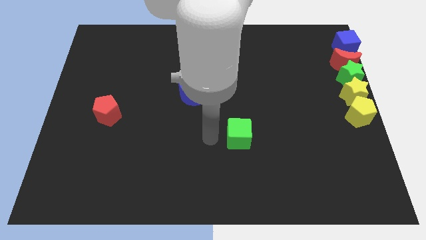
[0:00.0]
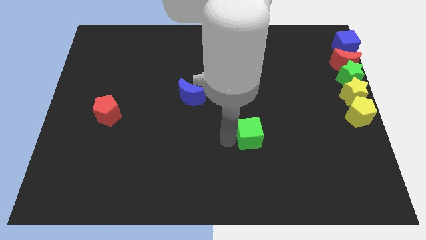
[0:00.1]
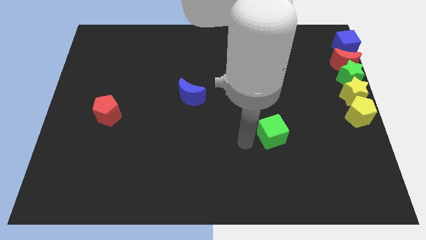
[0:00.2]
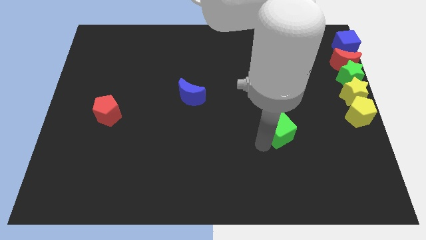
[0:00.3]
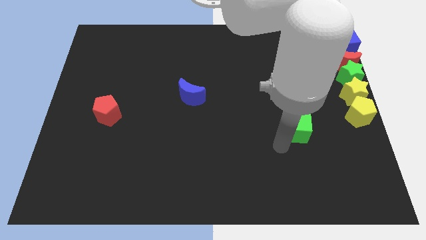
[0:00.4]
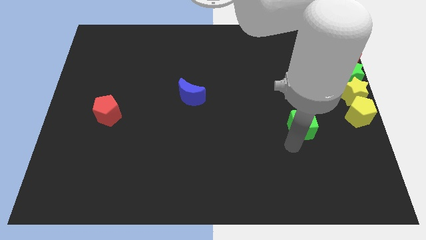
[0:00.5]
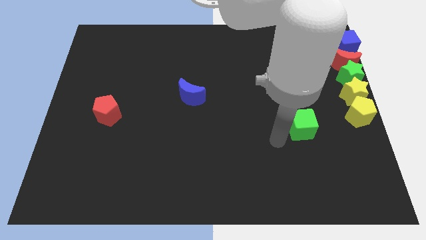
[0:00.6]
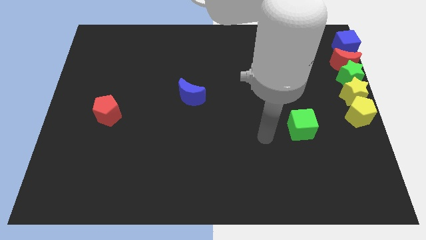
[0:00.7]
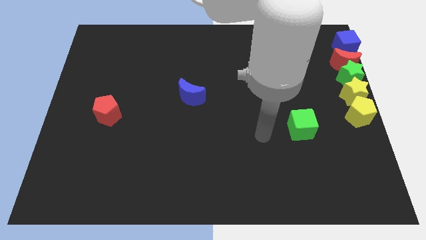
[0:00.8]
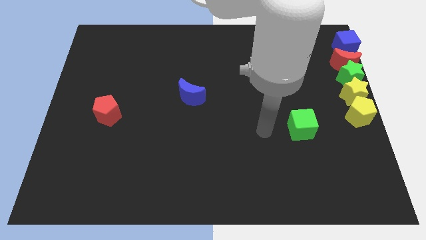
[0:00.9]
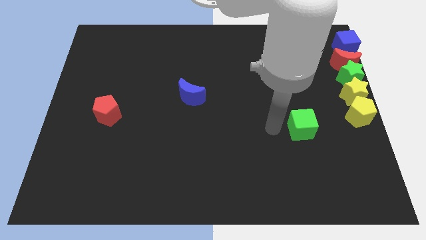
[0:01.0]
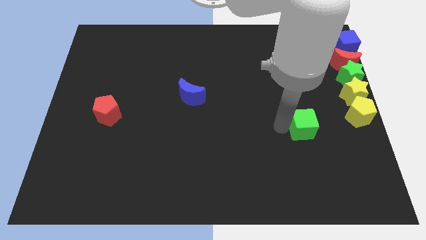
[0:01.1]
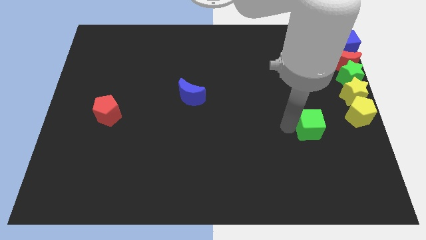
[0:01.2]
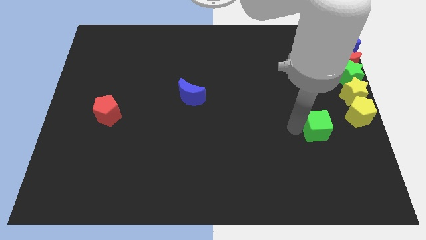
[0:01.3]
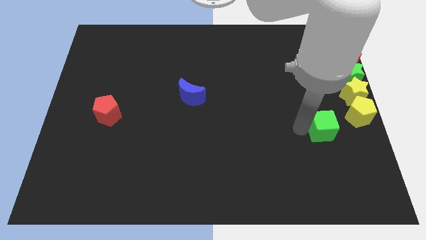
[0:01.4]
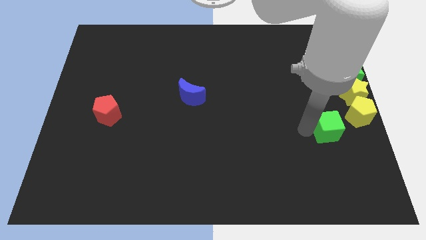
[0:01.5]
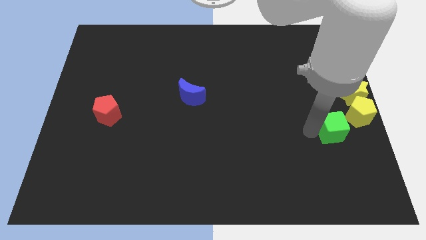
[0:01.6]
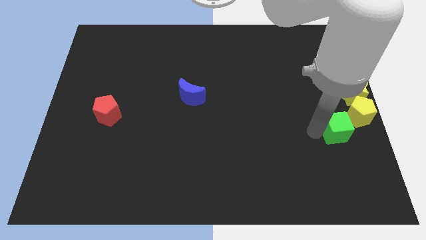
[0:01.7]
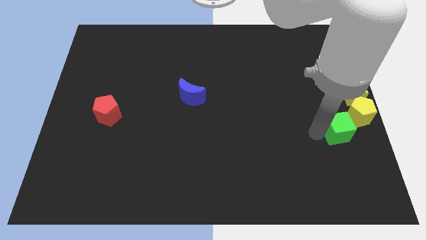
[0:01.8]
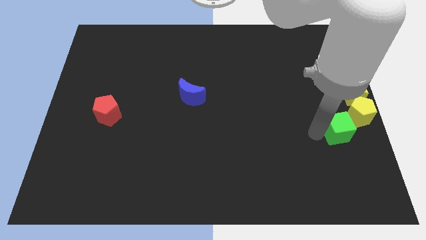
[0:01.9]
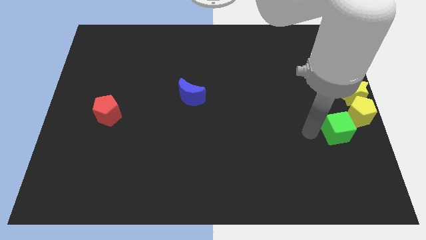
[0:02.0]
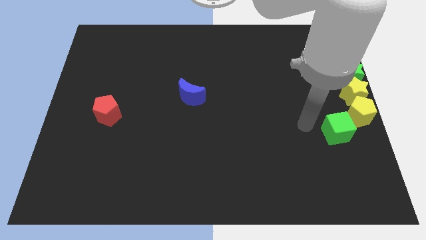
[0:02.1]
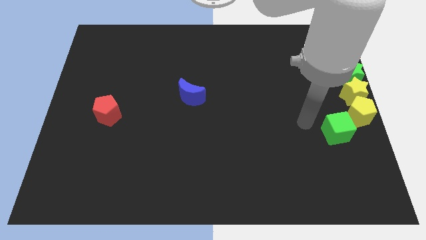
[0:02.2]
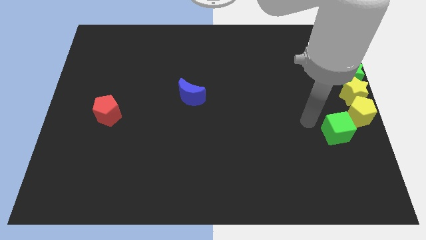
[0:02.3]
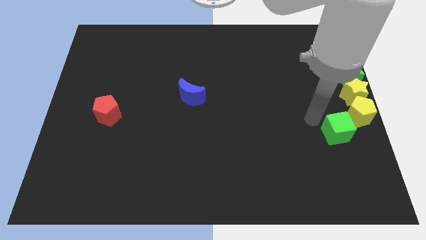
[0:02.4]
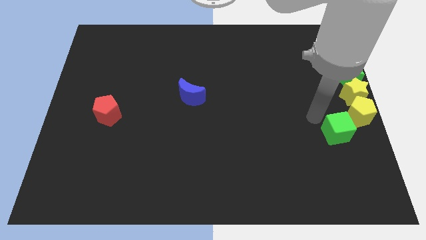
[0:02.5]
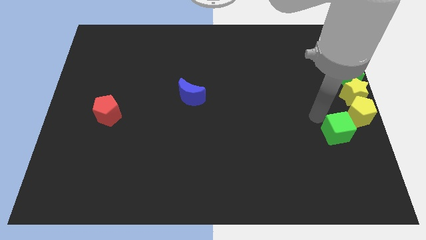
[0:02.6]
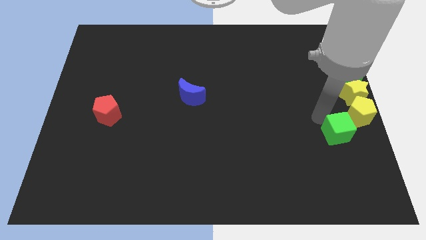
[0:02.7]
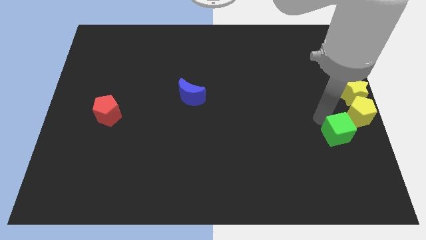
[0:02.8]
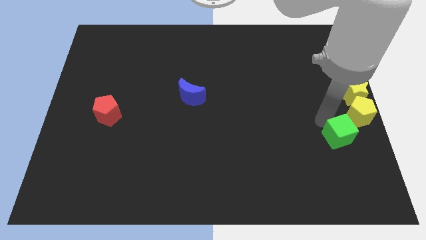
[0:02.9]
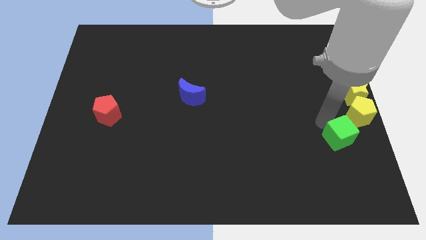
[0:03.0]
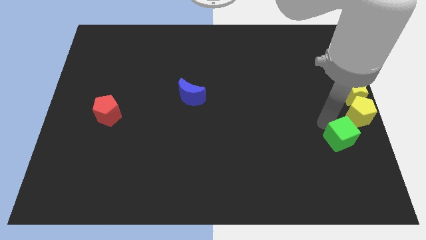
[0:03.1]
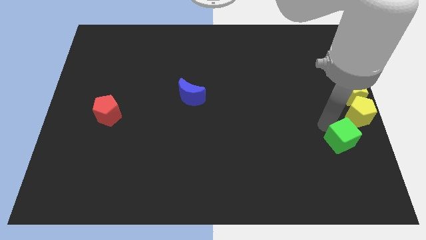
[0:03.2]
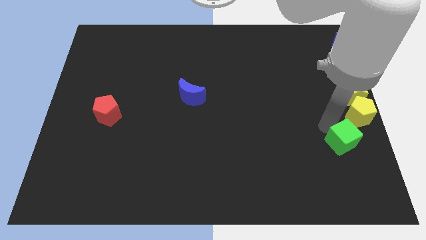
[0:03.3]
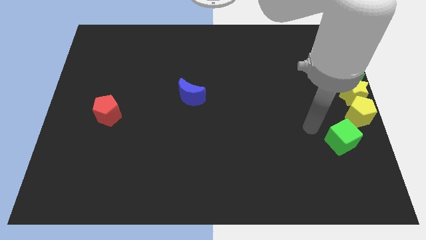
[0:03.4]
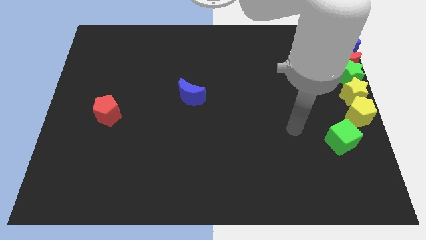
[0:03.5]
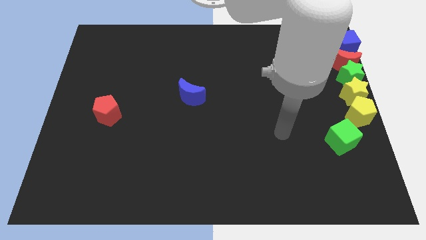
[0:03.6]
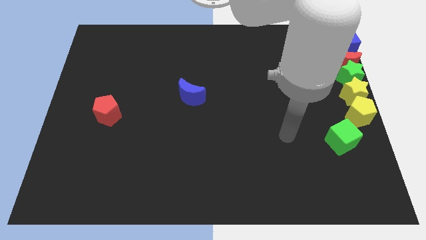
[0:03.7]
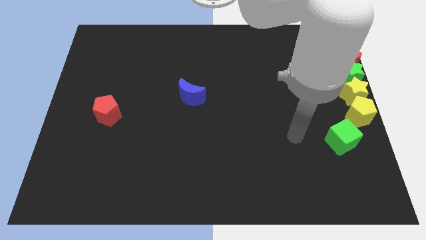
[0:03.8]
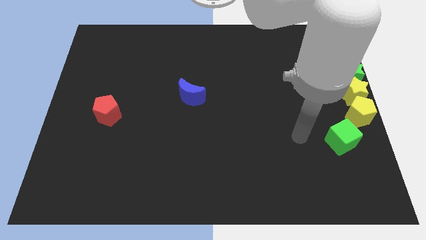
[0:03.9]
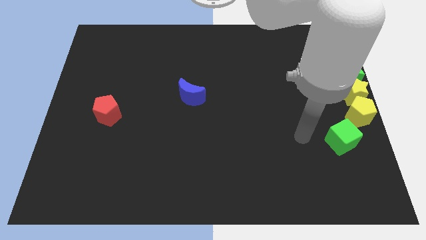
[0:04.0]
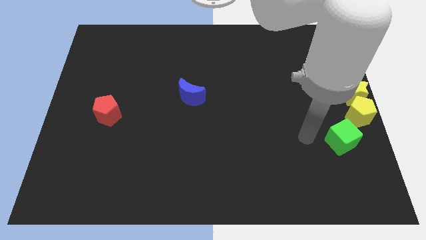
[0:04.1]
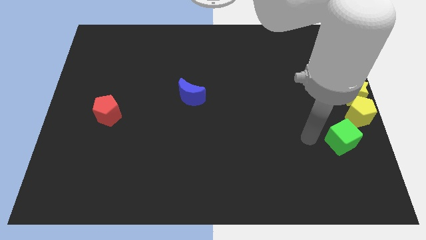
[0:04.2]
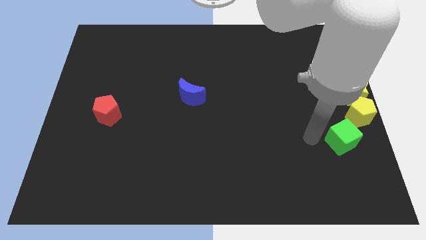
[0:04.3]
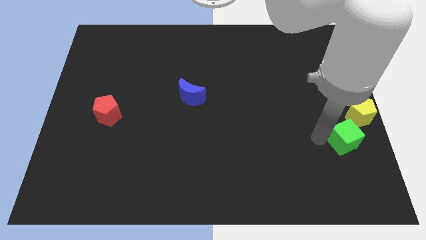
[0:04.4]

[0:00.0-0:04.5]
push the green cube towards the yellow pentagon

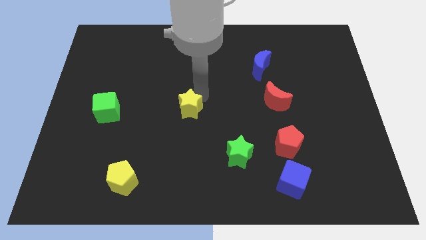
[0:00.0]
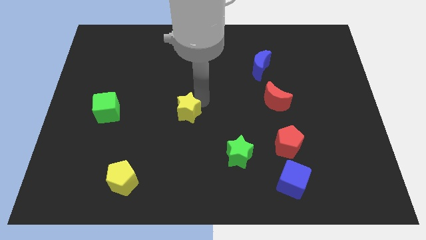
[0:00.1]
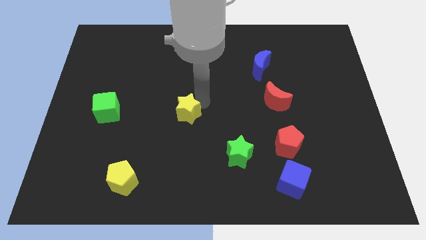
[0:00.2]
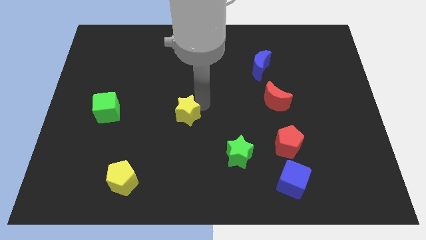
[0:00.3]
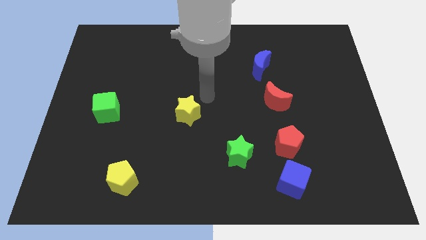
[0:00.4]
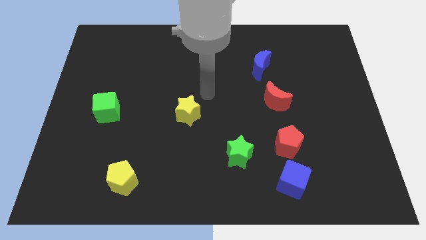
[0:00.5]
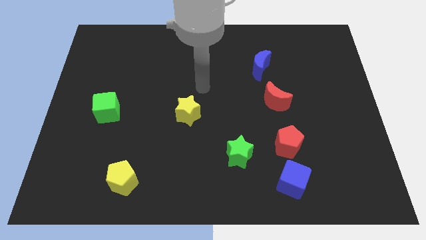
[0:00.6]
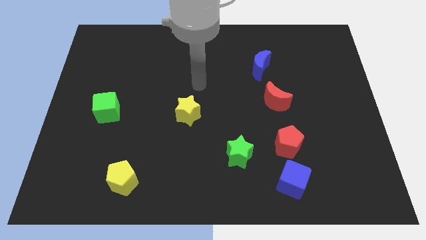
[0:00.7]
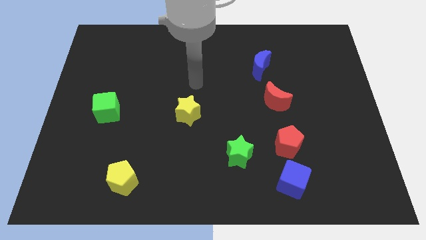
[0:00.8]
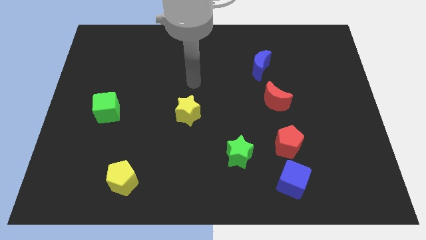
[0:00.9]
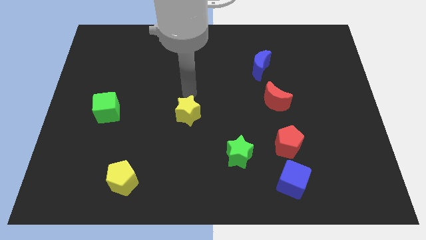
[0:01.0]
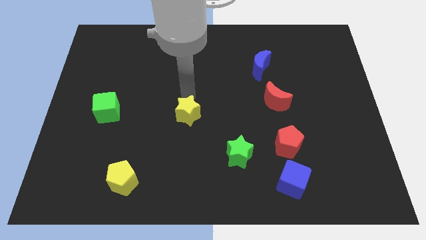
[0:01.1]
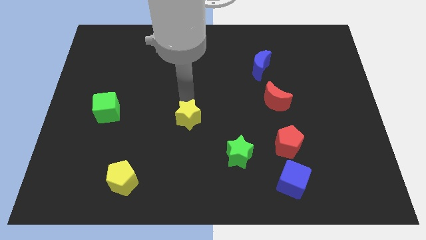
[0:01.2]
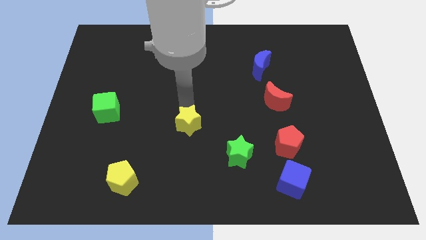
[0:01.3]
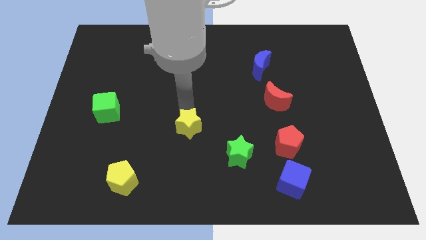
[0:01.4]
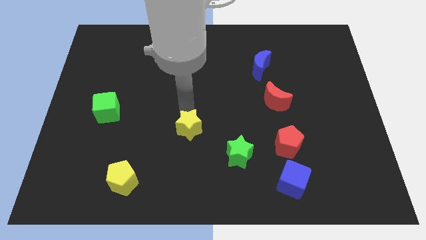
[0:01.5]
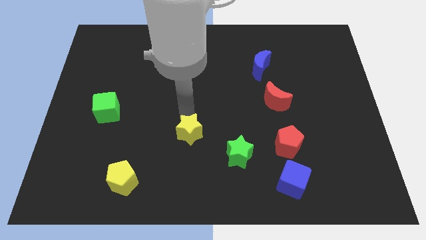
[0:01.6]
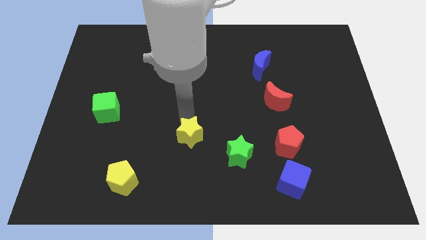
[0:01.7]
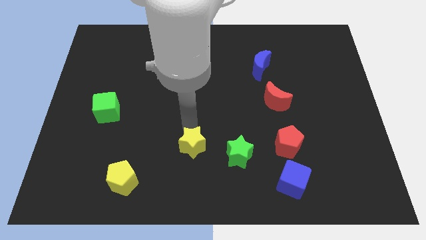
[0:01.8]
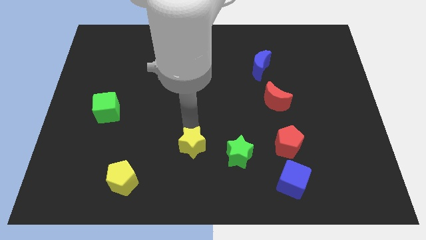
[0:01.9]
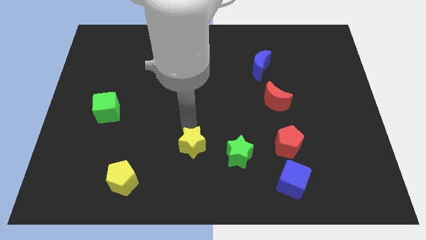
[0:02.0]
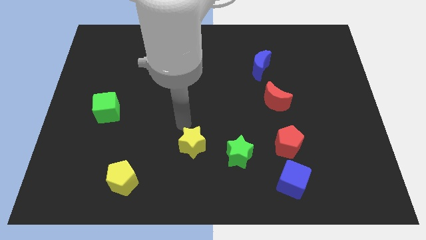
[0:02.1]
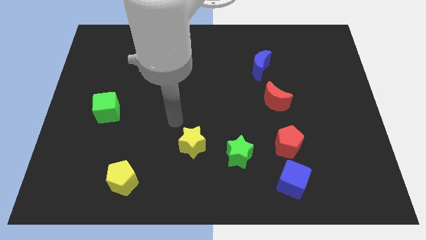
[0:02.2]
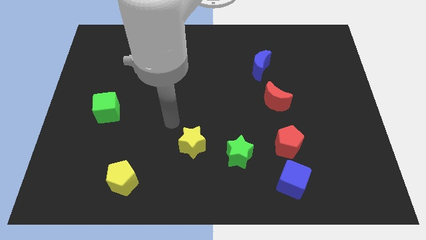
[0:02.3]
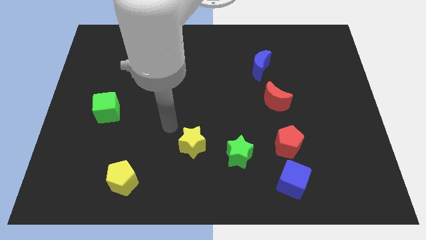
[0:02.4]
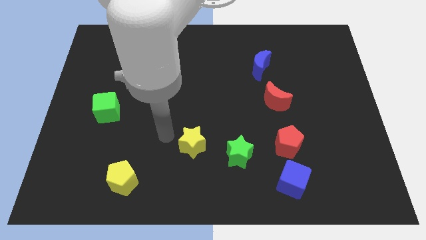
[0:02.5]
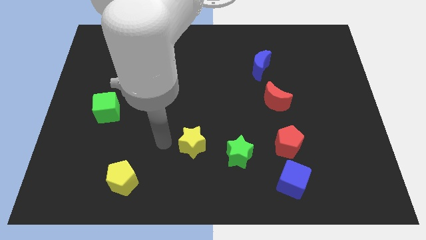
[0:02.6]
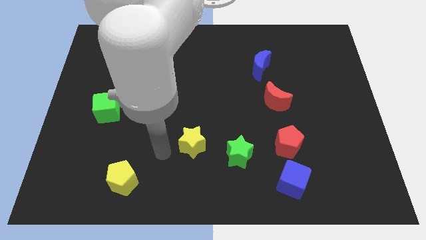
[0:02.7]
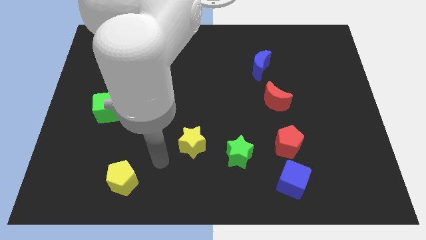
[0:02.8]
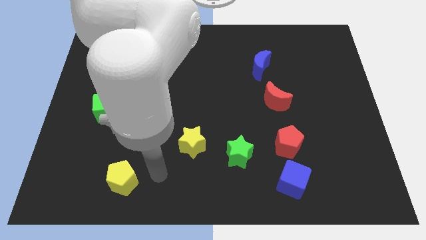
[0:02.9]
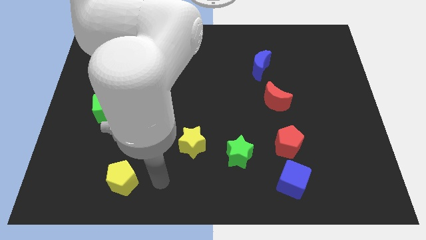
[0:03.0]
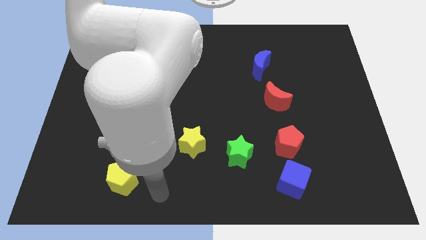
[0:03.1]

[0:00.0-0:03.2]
place yellow star left to the green star

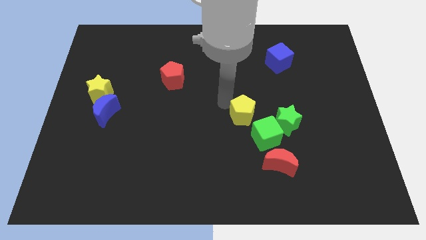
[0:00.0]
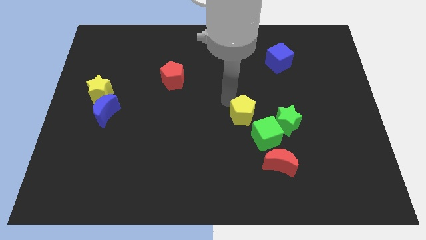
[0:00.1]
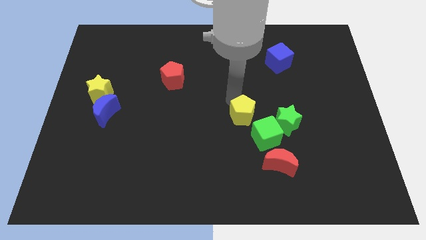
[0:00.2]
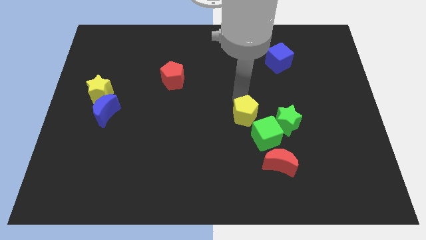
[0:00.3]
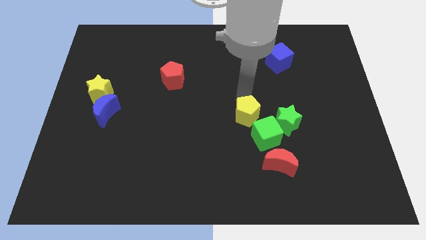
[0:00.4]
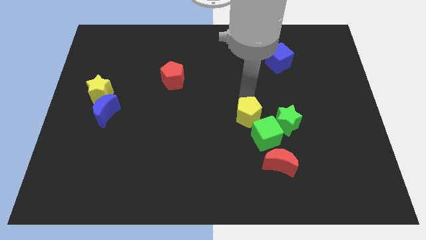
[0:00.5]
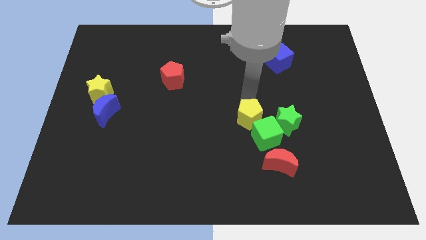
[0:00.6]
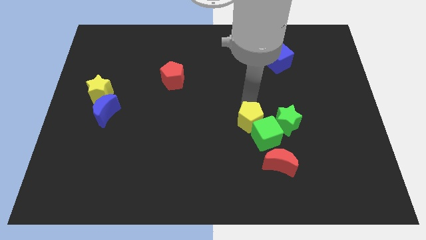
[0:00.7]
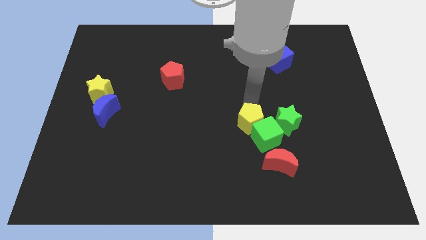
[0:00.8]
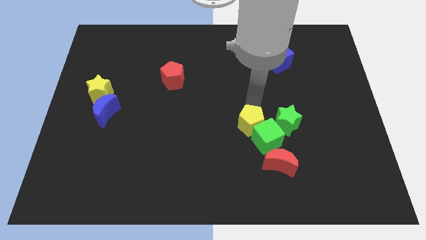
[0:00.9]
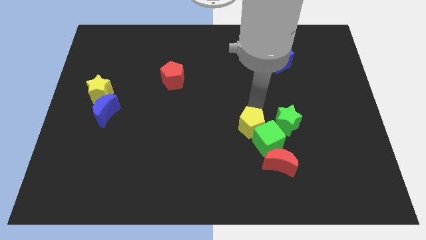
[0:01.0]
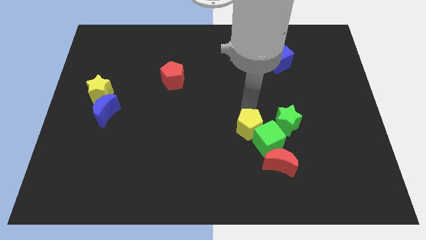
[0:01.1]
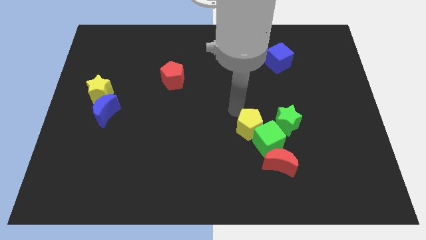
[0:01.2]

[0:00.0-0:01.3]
place the yellow pentagon above the green cube
